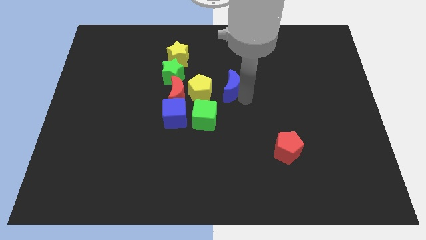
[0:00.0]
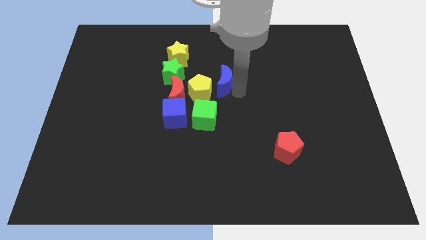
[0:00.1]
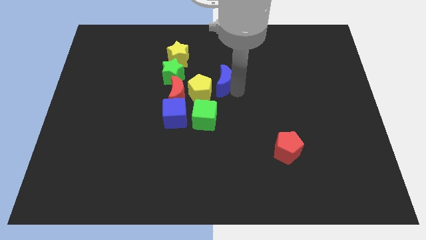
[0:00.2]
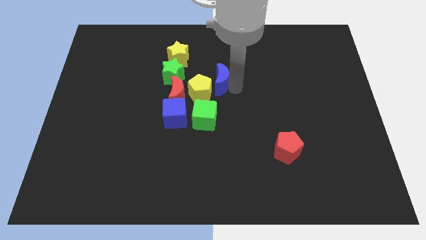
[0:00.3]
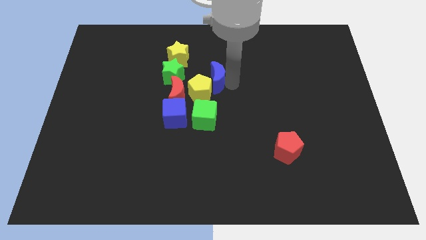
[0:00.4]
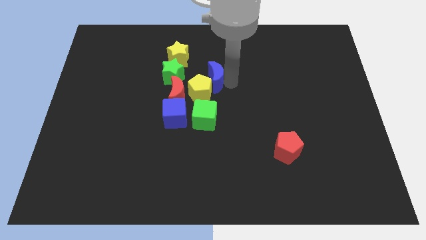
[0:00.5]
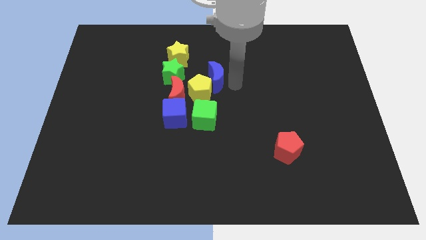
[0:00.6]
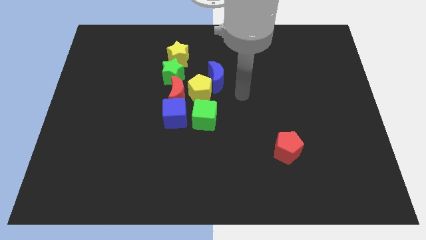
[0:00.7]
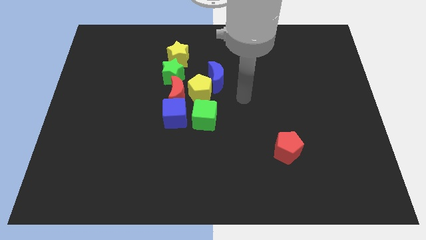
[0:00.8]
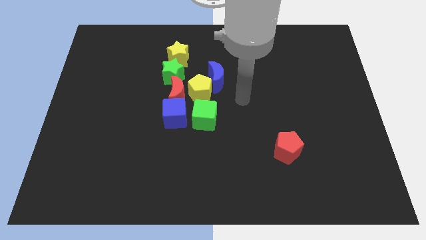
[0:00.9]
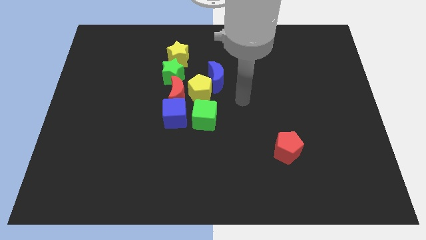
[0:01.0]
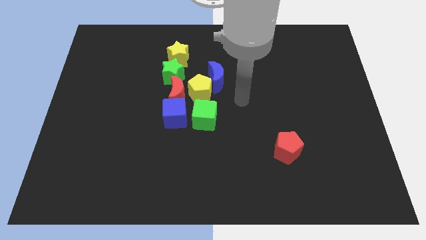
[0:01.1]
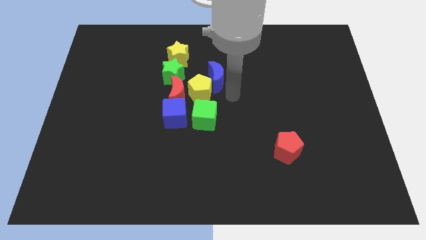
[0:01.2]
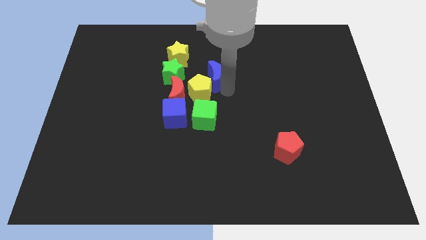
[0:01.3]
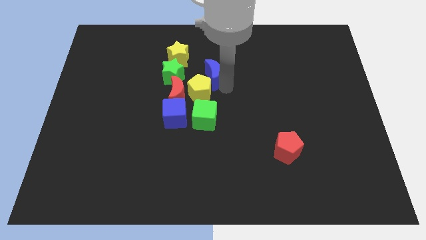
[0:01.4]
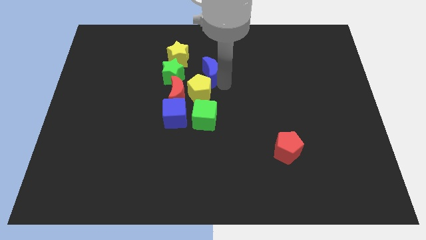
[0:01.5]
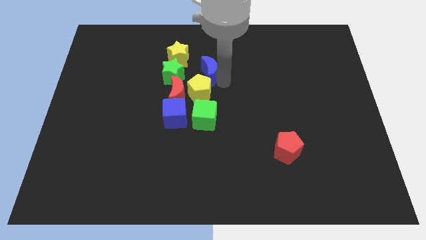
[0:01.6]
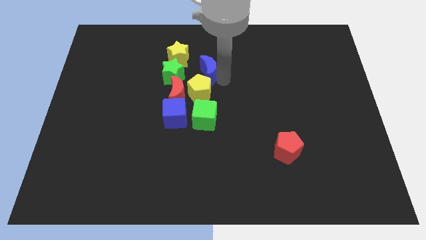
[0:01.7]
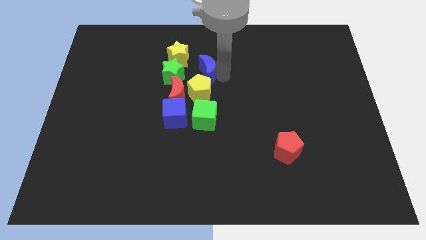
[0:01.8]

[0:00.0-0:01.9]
push the blue moon into the yellow pentagon

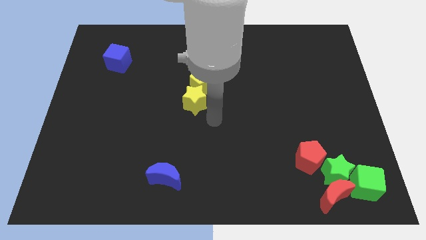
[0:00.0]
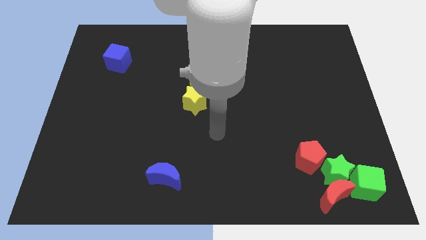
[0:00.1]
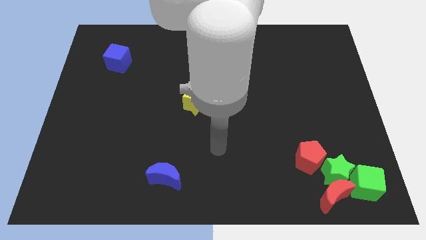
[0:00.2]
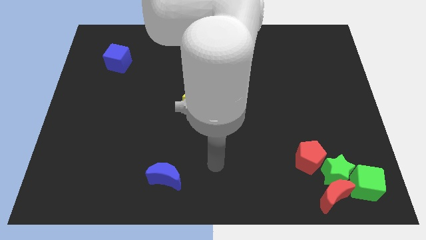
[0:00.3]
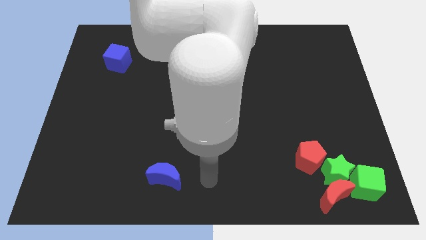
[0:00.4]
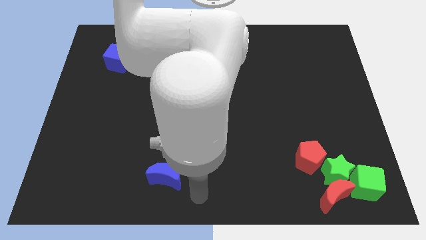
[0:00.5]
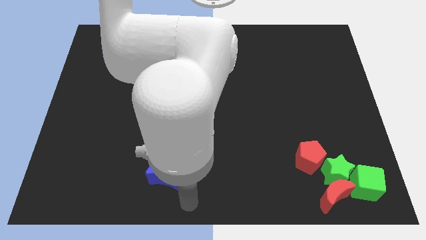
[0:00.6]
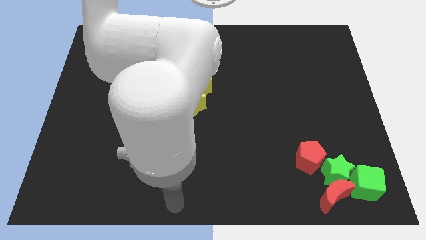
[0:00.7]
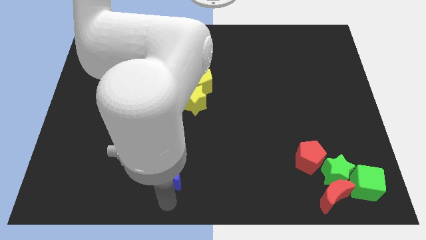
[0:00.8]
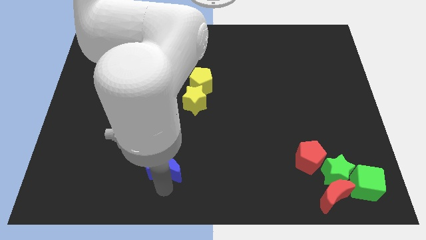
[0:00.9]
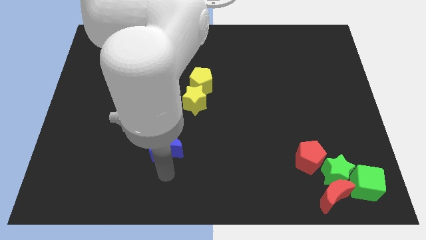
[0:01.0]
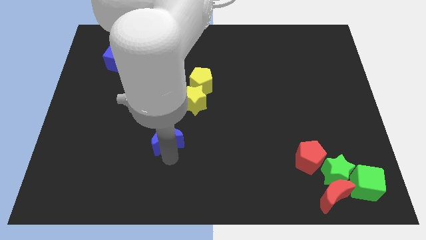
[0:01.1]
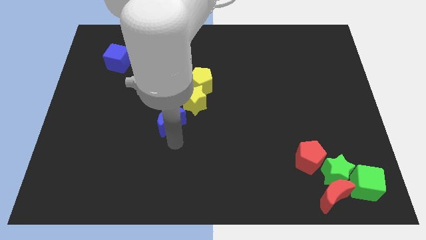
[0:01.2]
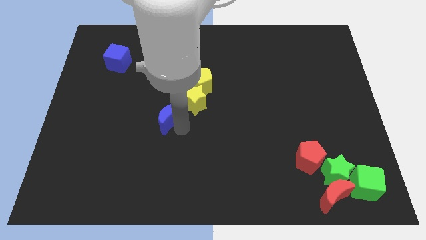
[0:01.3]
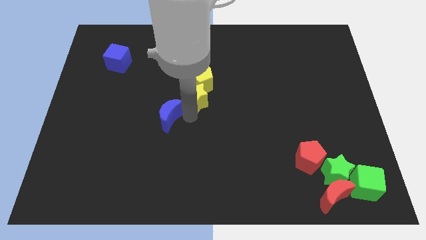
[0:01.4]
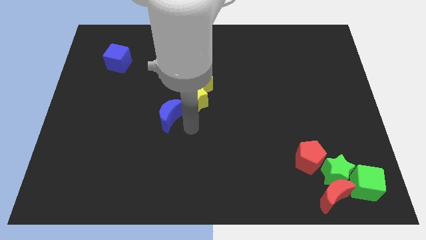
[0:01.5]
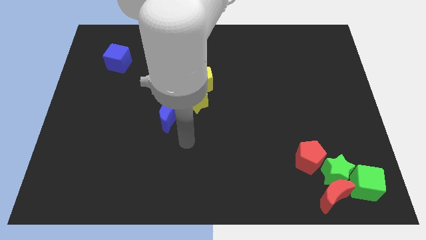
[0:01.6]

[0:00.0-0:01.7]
move the blue crescent left bottom the yellow star

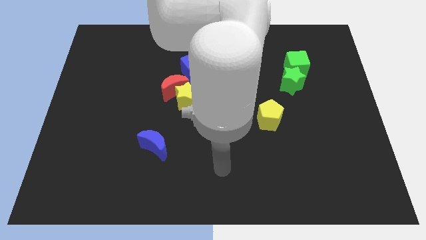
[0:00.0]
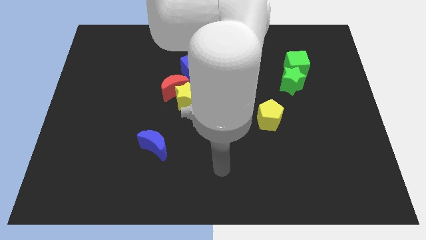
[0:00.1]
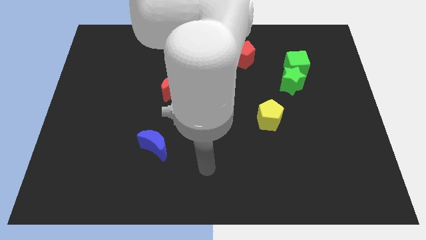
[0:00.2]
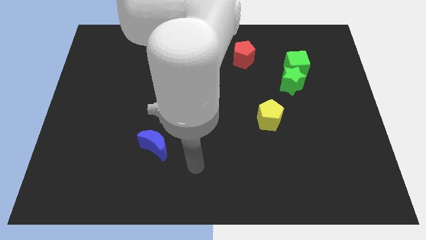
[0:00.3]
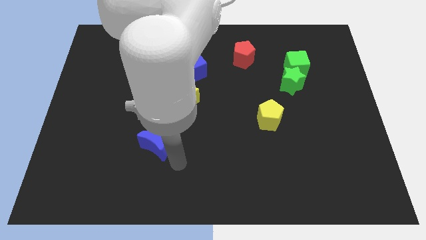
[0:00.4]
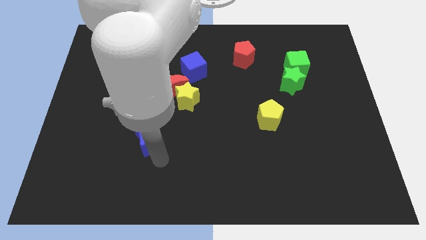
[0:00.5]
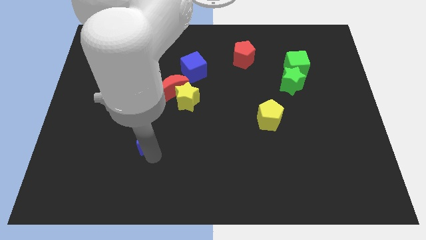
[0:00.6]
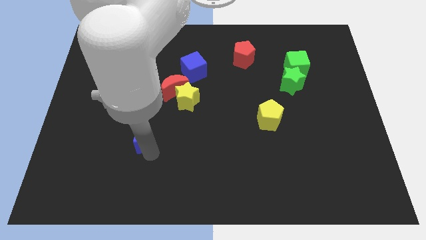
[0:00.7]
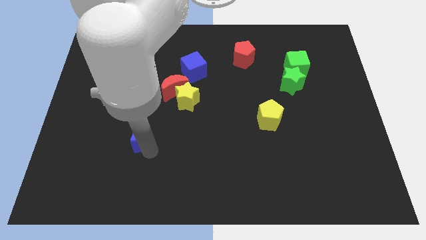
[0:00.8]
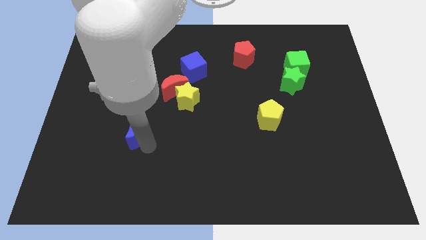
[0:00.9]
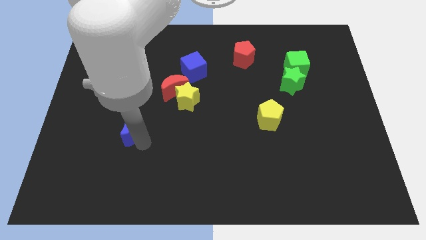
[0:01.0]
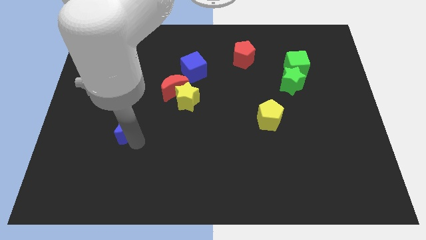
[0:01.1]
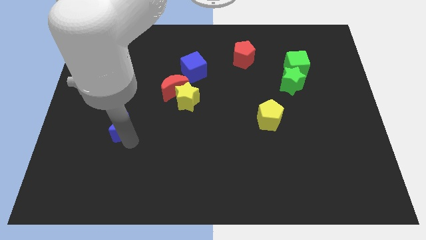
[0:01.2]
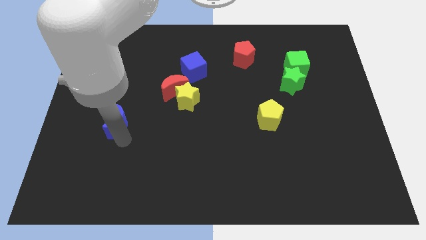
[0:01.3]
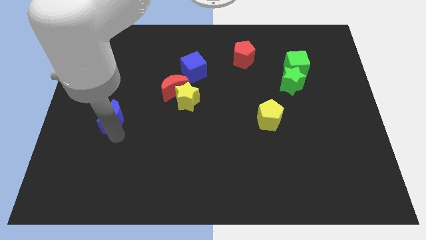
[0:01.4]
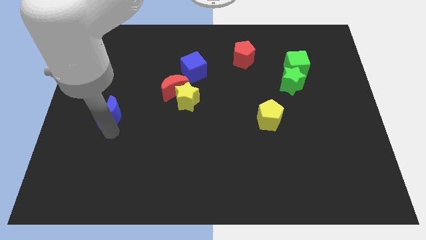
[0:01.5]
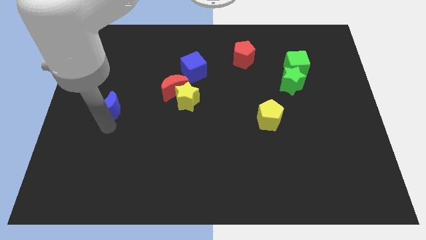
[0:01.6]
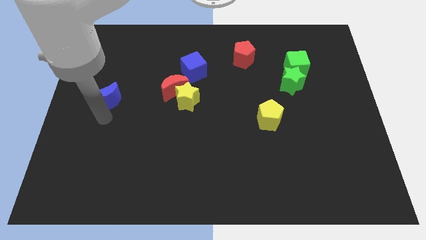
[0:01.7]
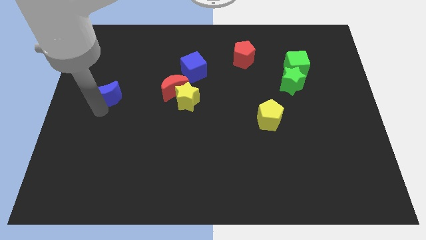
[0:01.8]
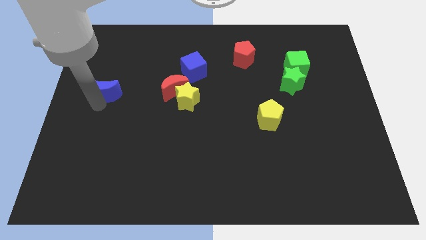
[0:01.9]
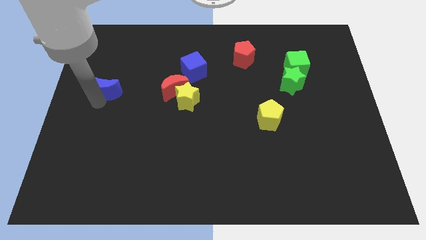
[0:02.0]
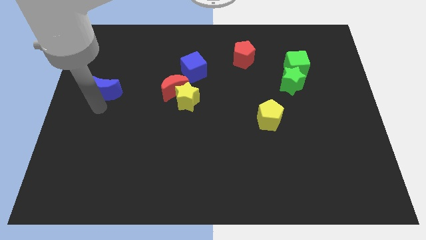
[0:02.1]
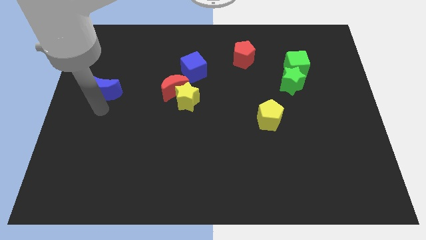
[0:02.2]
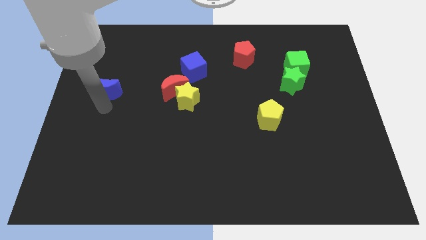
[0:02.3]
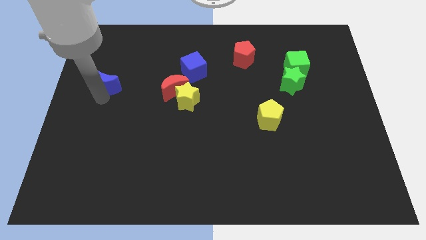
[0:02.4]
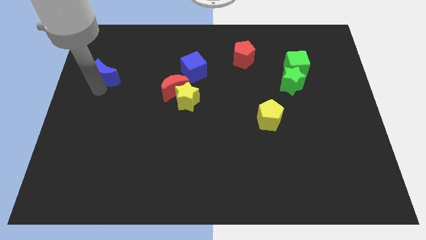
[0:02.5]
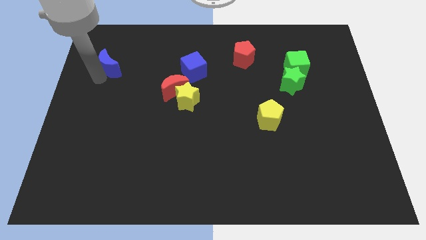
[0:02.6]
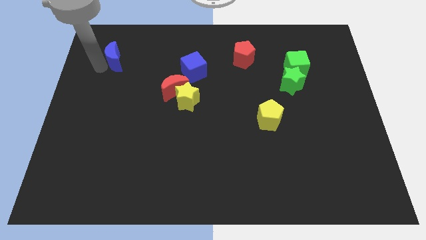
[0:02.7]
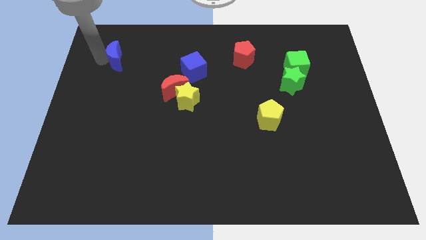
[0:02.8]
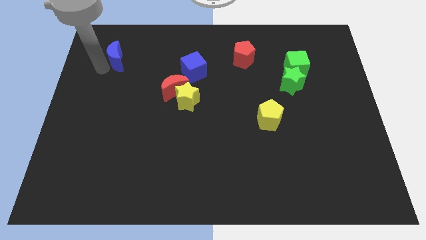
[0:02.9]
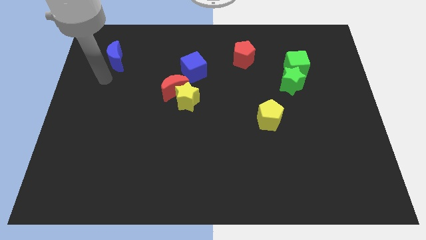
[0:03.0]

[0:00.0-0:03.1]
push the blue crescent towards the top

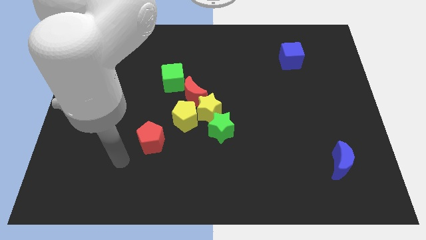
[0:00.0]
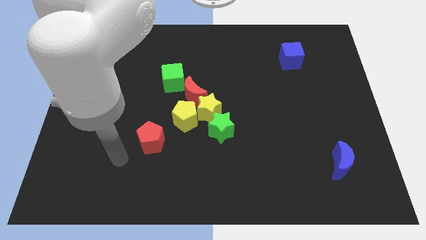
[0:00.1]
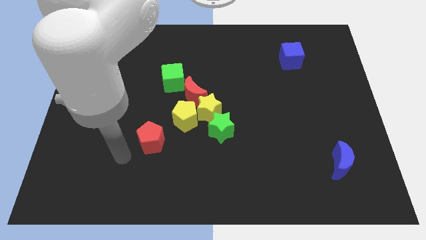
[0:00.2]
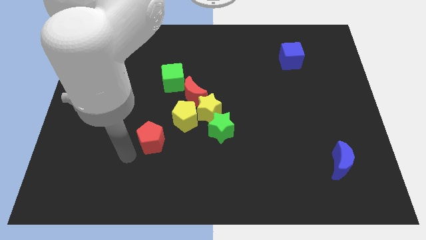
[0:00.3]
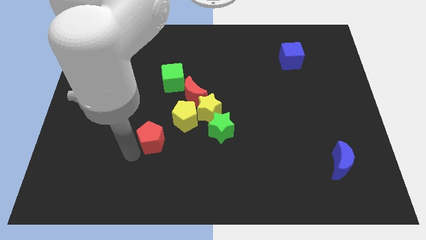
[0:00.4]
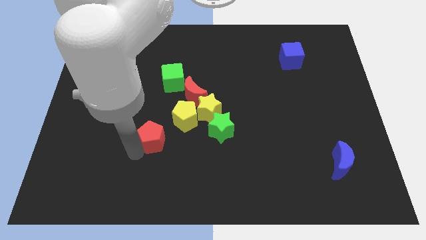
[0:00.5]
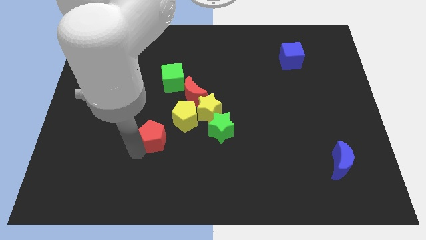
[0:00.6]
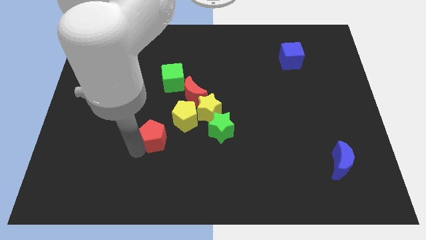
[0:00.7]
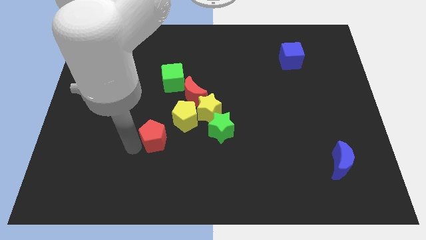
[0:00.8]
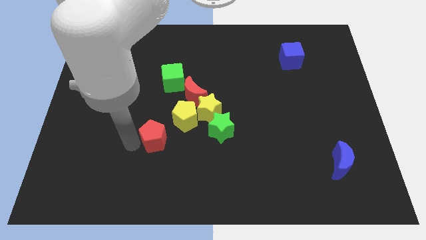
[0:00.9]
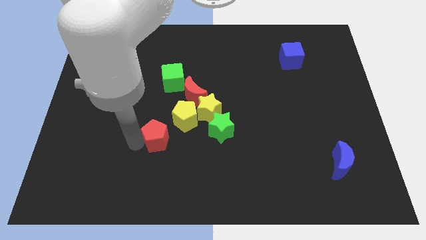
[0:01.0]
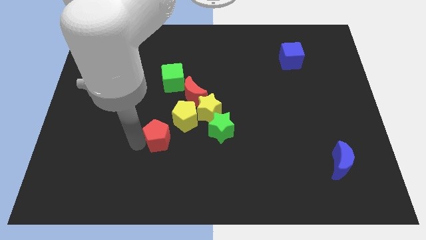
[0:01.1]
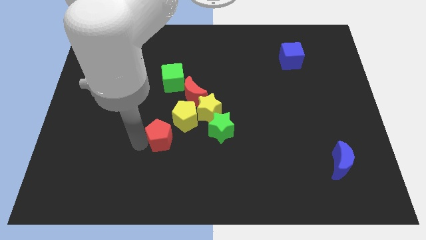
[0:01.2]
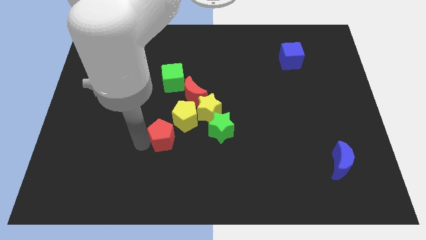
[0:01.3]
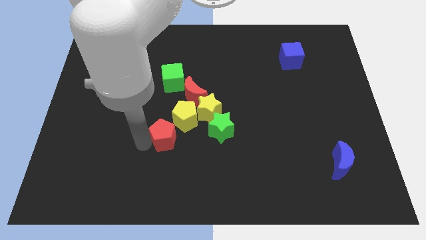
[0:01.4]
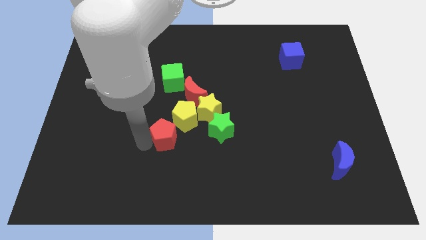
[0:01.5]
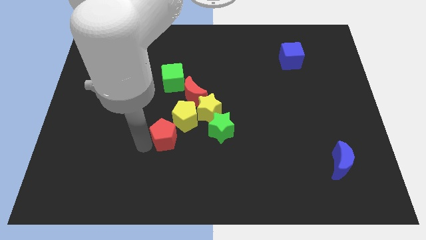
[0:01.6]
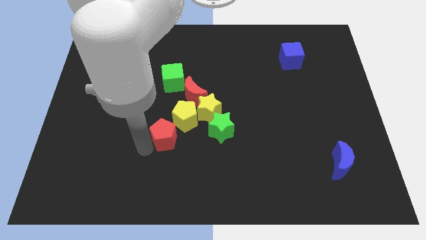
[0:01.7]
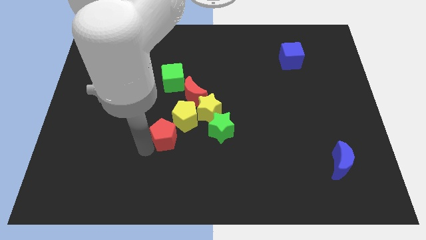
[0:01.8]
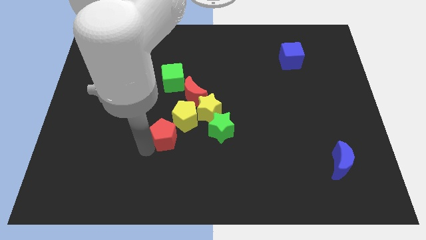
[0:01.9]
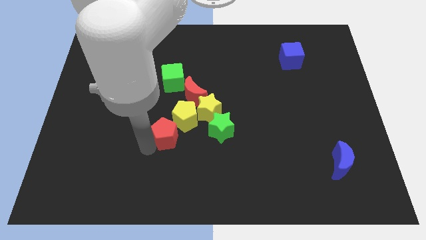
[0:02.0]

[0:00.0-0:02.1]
move the red pentagon to the left of the yellow pentagon
